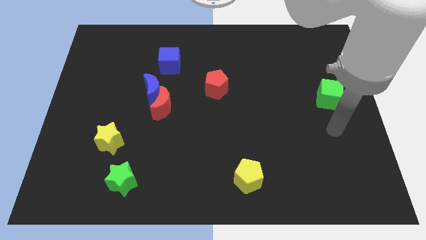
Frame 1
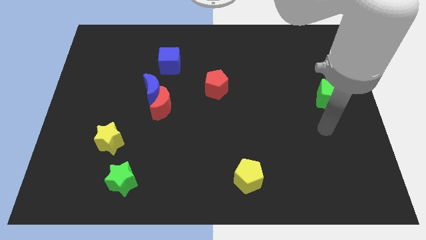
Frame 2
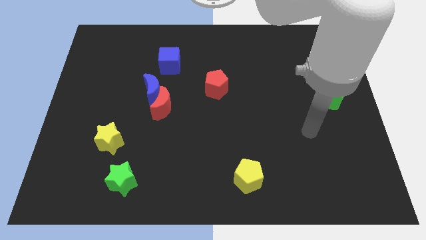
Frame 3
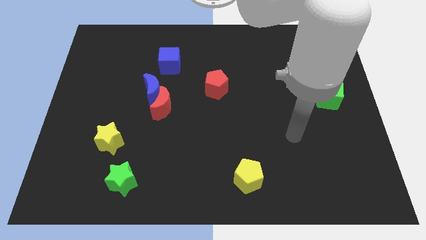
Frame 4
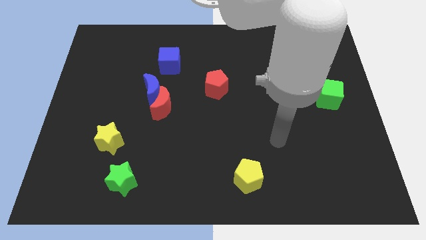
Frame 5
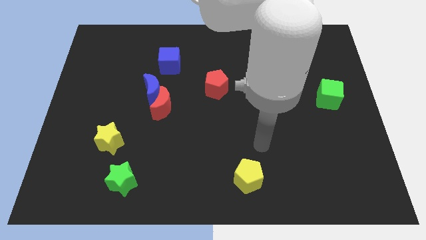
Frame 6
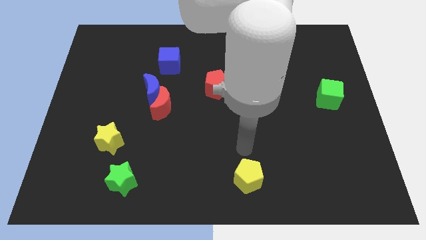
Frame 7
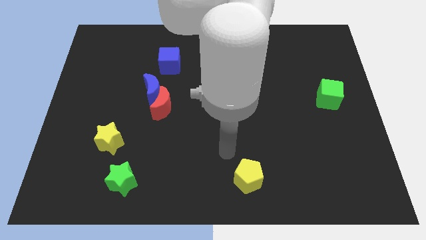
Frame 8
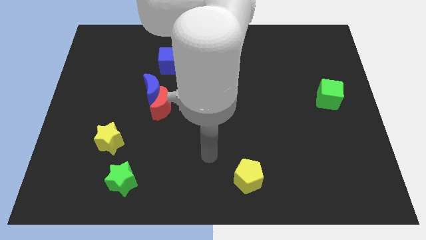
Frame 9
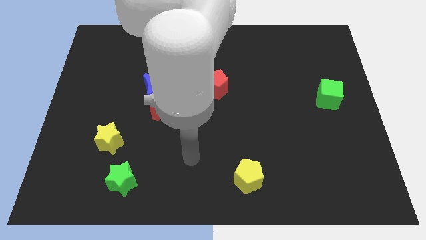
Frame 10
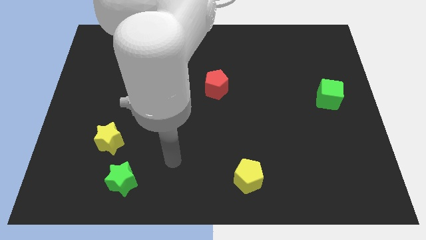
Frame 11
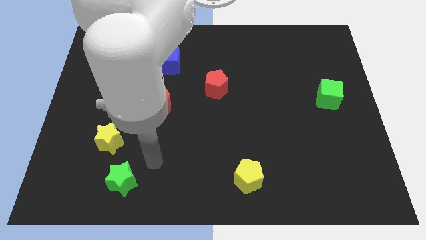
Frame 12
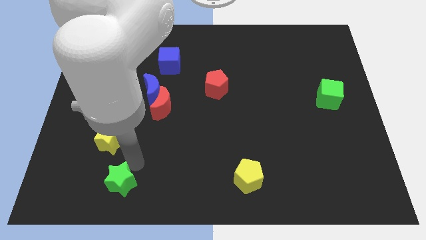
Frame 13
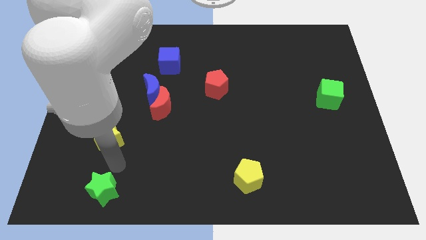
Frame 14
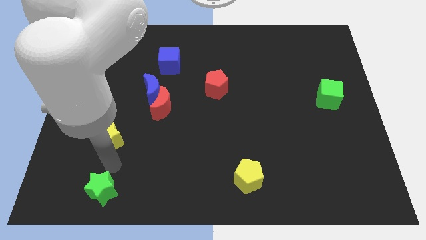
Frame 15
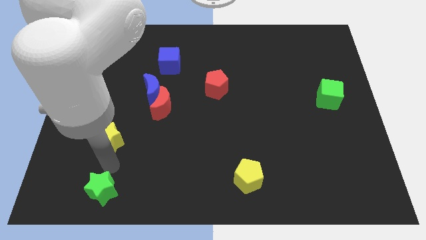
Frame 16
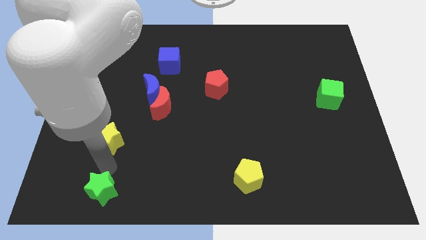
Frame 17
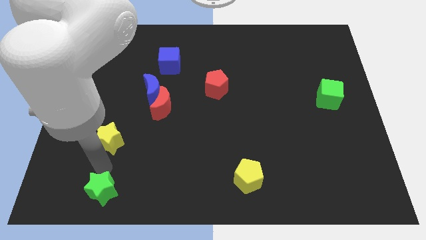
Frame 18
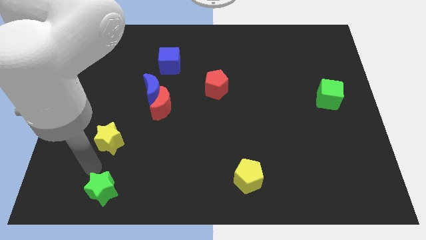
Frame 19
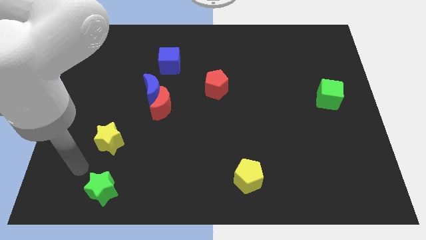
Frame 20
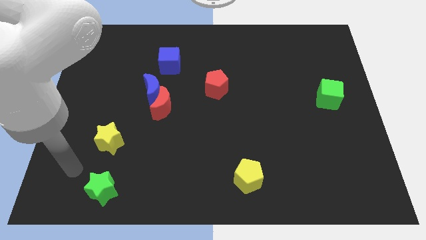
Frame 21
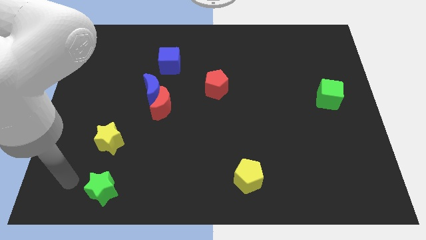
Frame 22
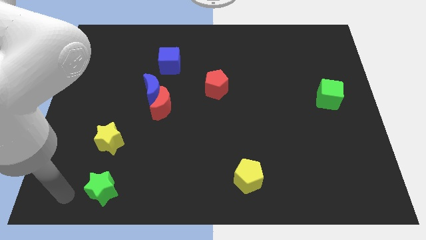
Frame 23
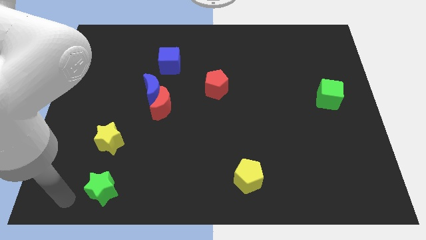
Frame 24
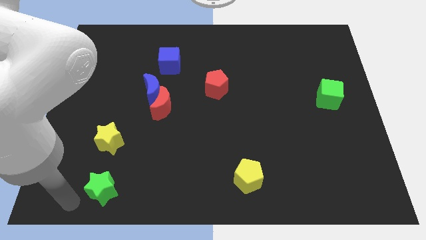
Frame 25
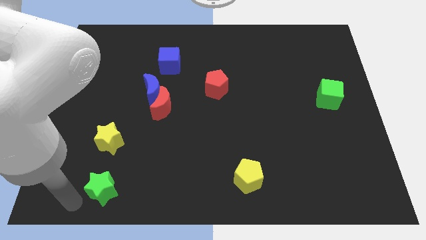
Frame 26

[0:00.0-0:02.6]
slightly move the green star below the yellow star

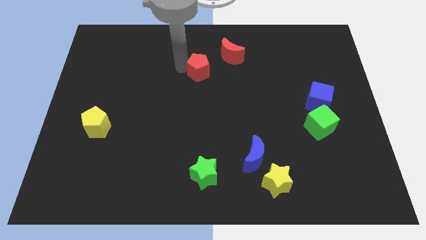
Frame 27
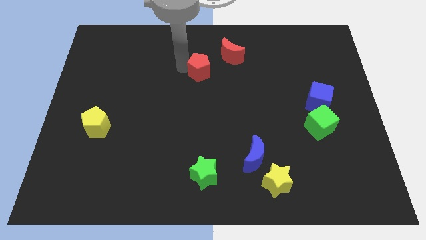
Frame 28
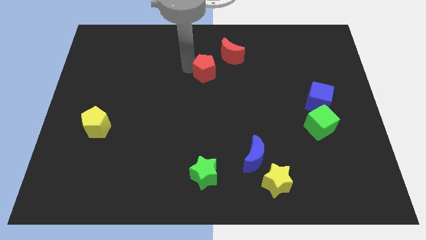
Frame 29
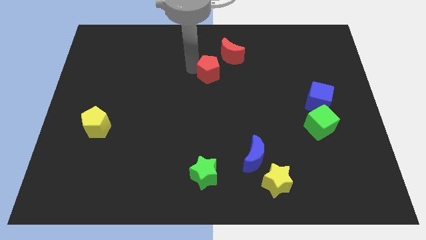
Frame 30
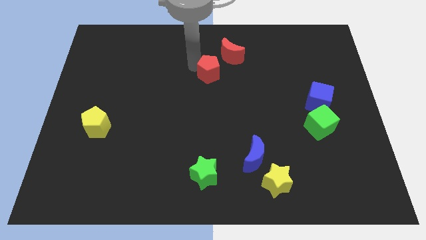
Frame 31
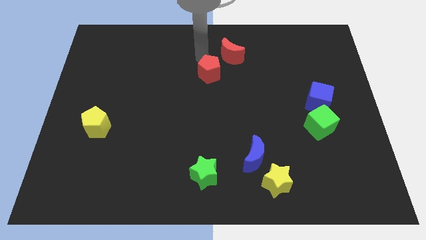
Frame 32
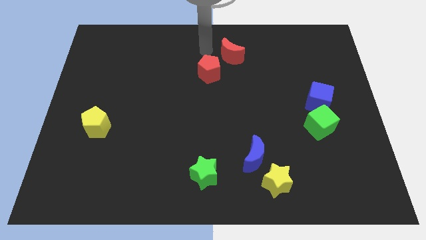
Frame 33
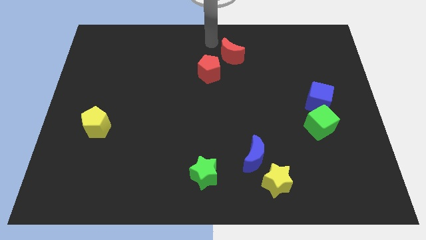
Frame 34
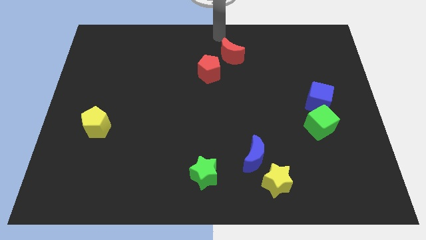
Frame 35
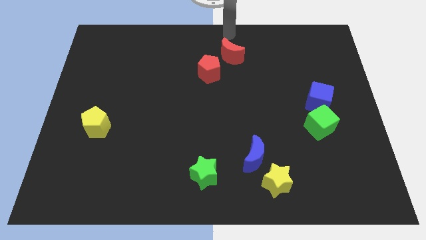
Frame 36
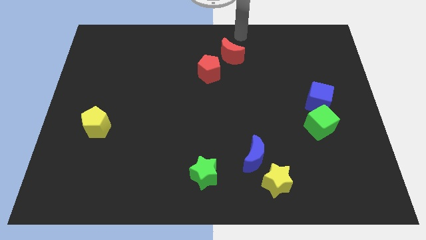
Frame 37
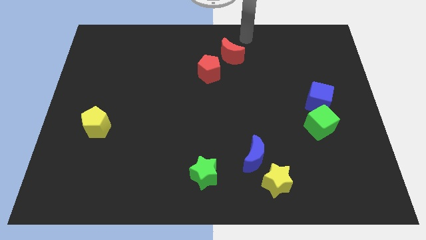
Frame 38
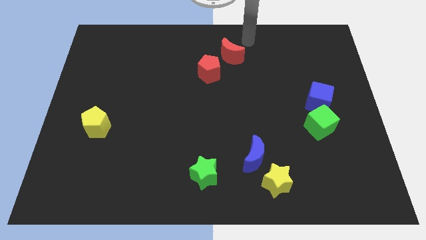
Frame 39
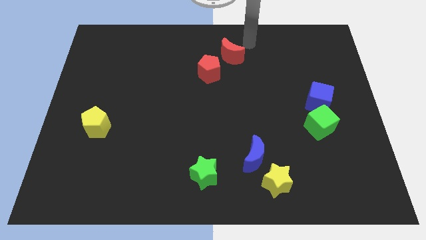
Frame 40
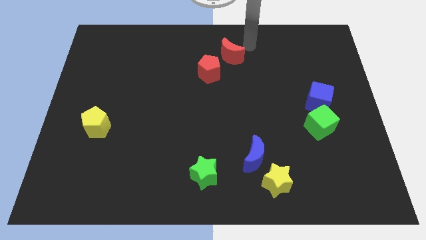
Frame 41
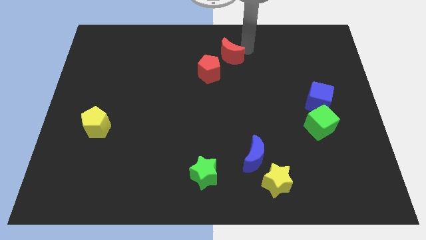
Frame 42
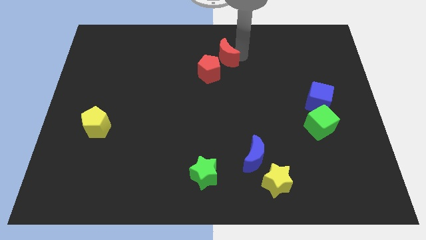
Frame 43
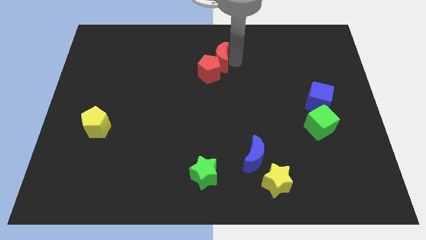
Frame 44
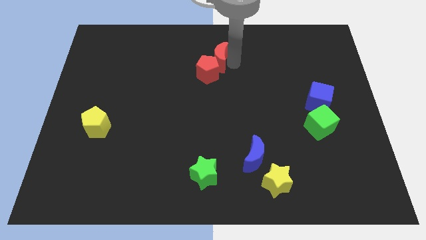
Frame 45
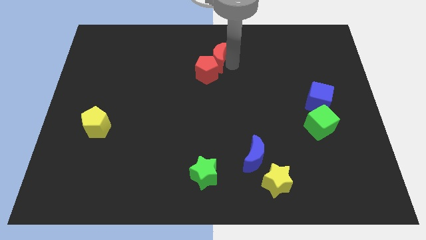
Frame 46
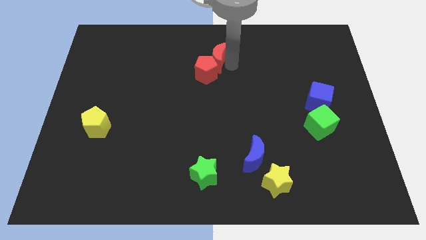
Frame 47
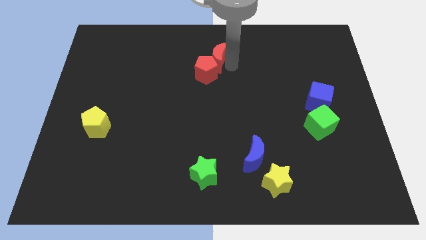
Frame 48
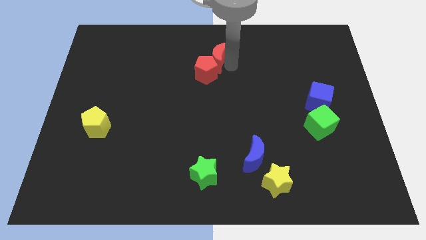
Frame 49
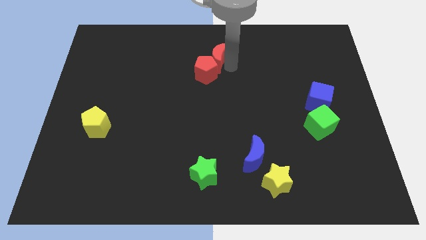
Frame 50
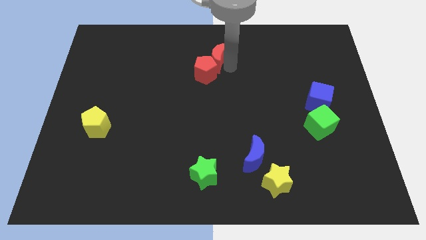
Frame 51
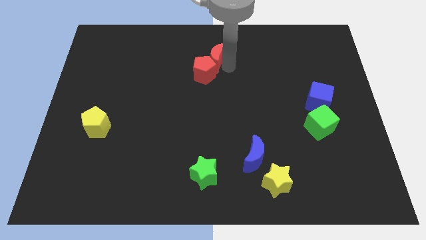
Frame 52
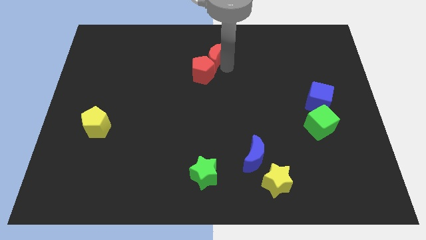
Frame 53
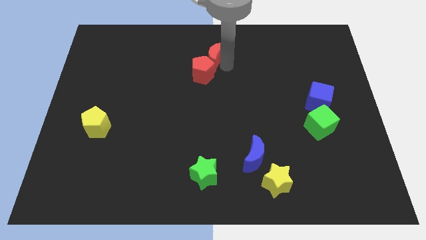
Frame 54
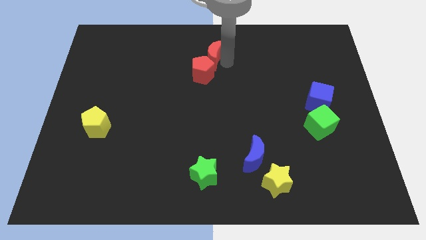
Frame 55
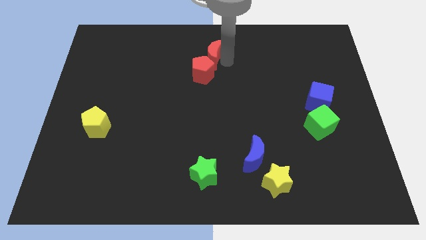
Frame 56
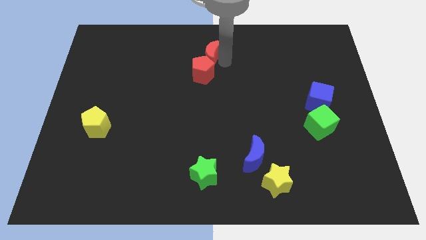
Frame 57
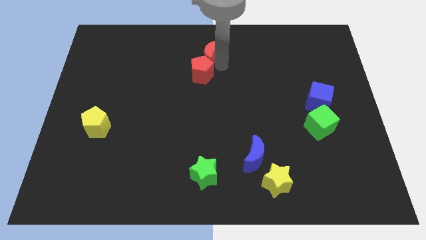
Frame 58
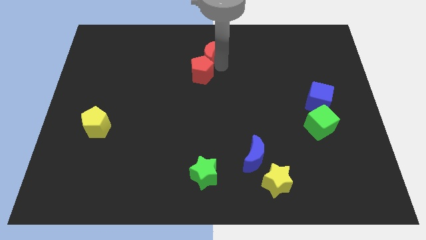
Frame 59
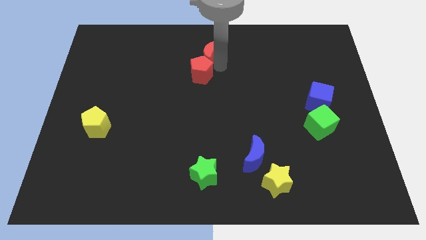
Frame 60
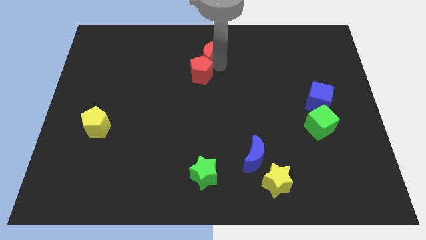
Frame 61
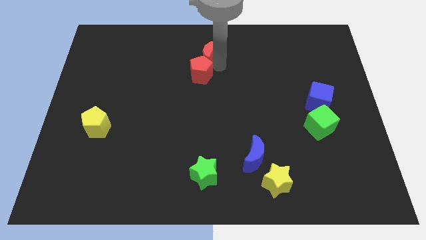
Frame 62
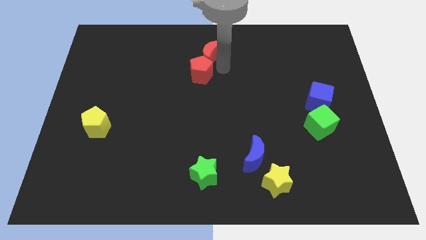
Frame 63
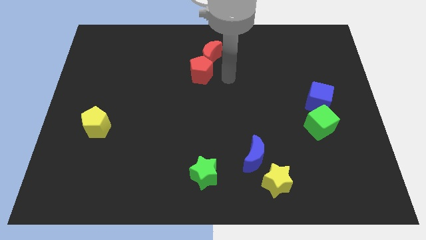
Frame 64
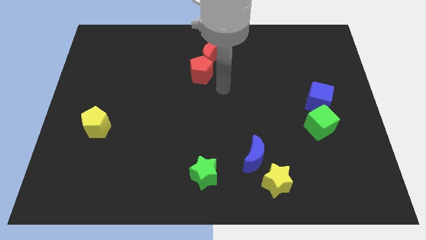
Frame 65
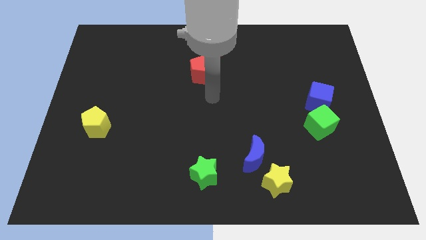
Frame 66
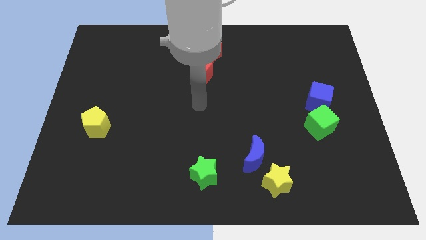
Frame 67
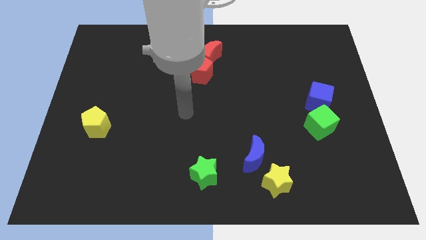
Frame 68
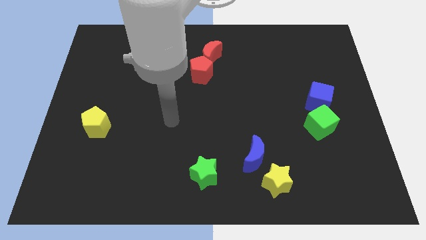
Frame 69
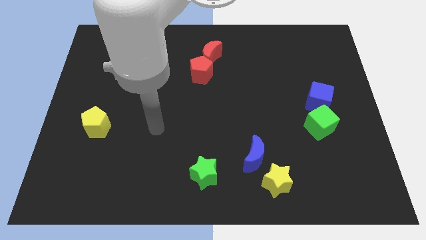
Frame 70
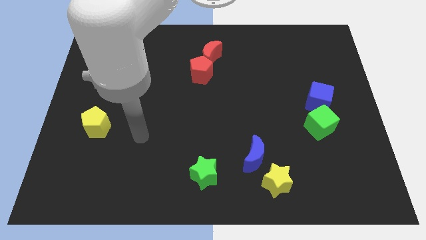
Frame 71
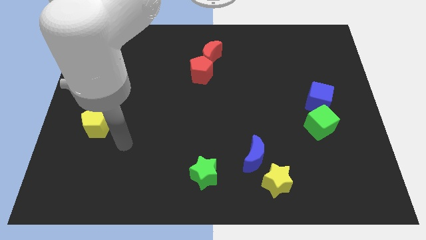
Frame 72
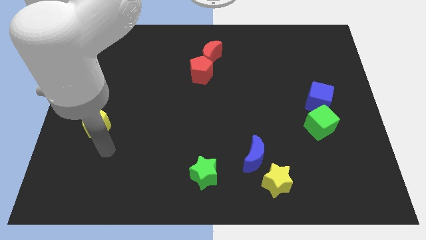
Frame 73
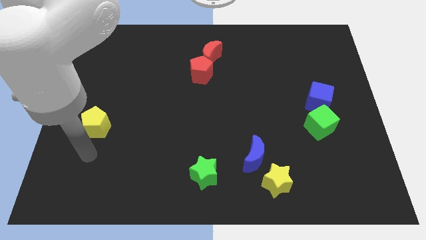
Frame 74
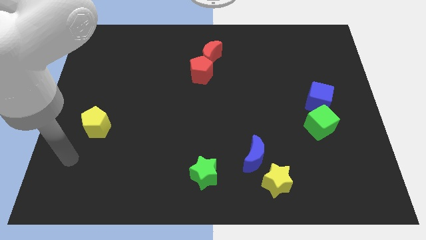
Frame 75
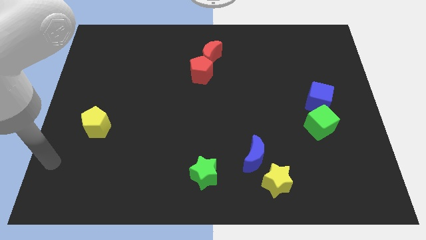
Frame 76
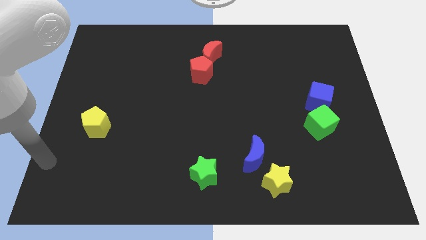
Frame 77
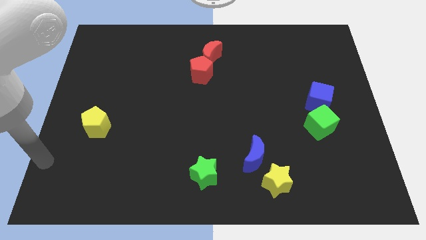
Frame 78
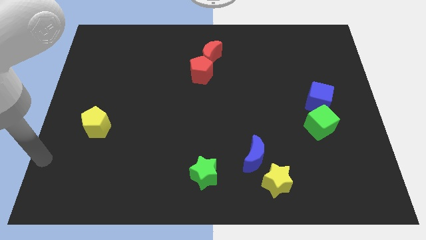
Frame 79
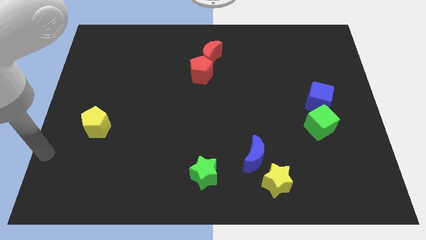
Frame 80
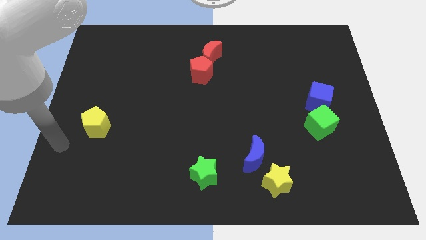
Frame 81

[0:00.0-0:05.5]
push the red moon into the red pentagon

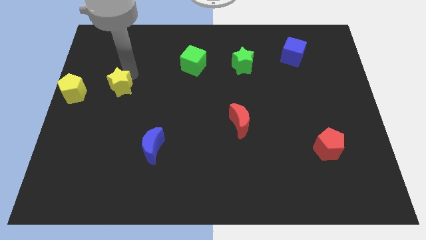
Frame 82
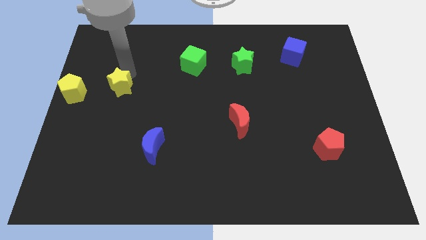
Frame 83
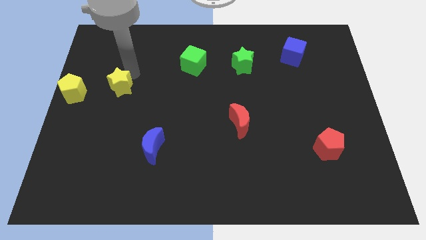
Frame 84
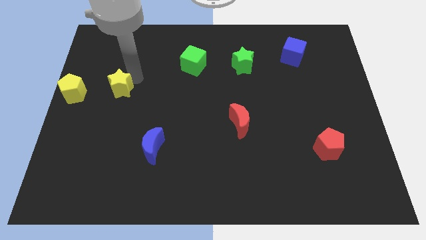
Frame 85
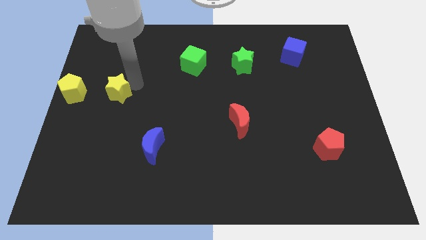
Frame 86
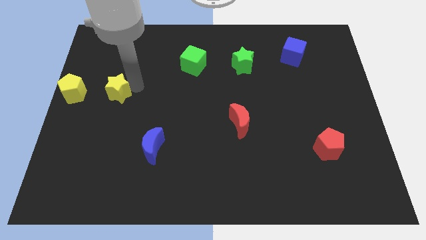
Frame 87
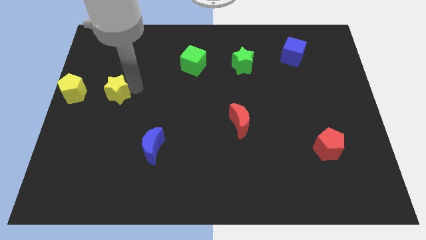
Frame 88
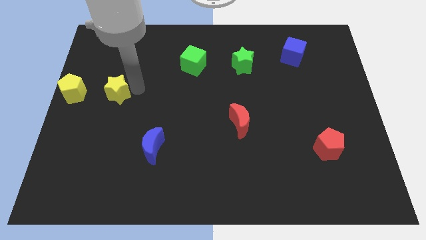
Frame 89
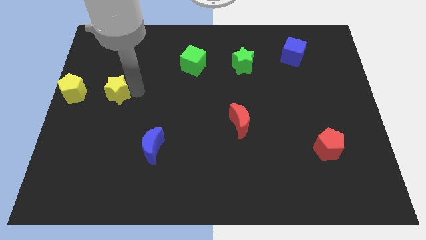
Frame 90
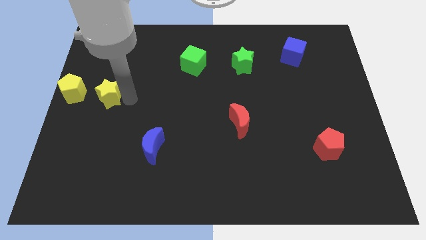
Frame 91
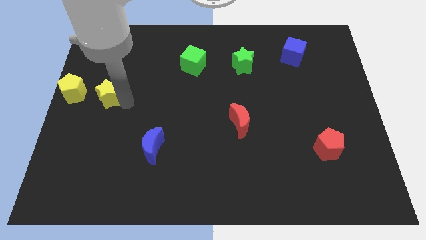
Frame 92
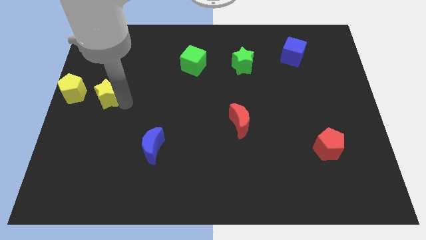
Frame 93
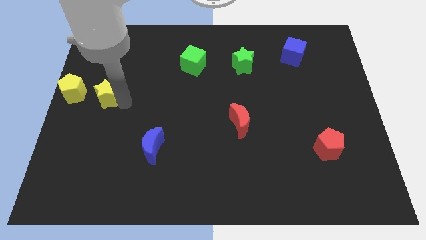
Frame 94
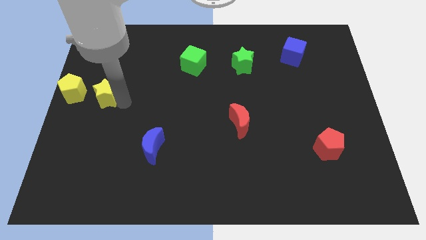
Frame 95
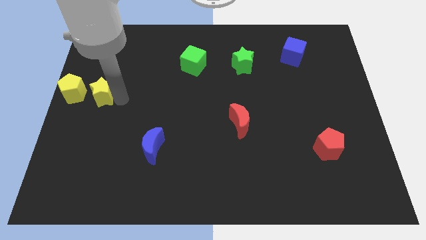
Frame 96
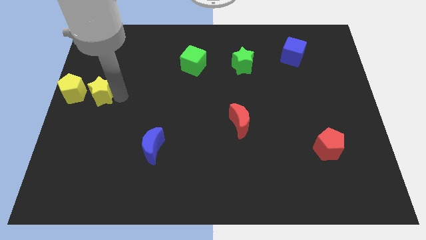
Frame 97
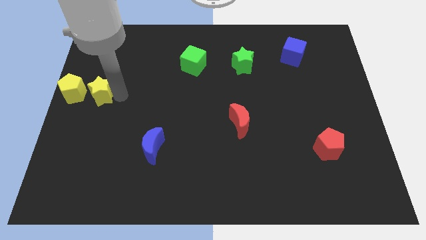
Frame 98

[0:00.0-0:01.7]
place the yellow star horizontally to the right side of the yellow pentagon
